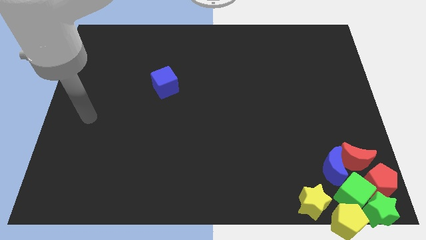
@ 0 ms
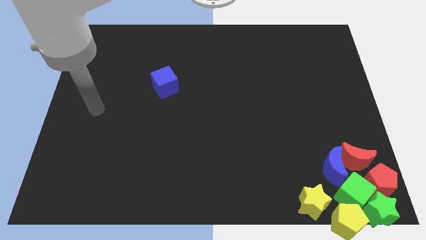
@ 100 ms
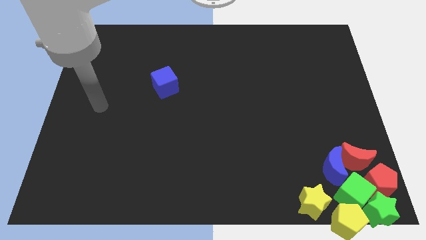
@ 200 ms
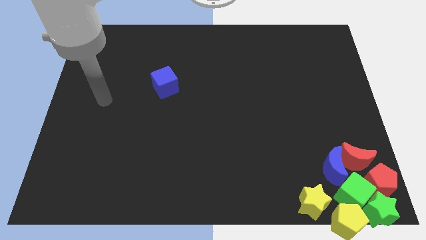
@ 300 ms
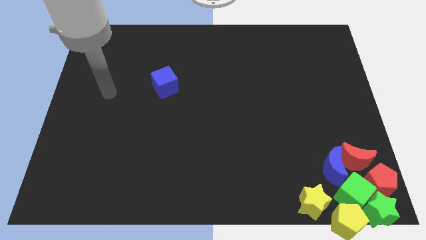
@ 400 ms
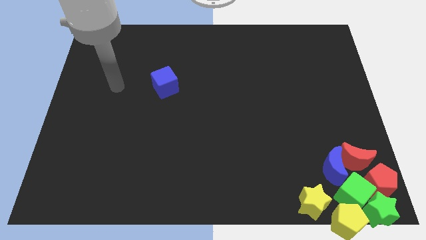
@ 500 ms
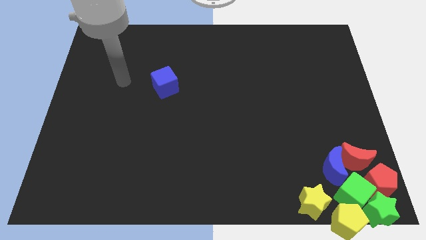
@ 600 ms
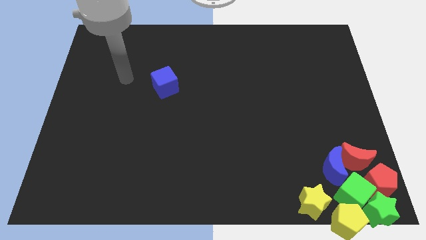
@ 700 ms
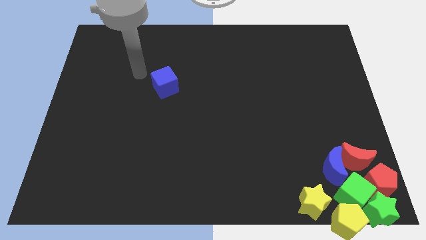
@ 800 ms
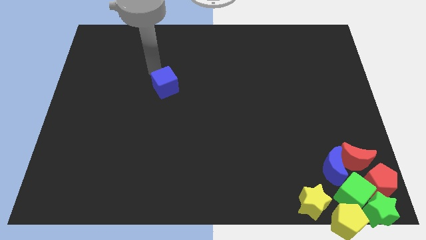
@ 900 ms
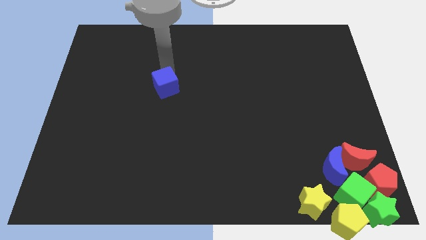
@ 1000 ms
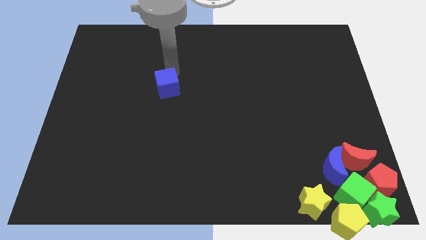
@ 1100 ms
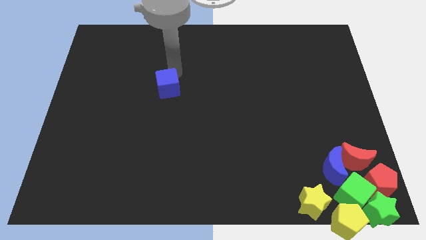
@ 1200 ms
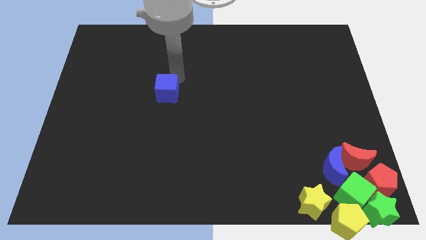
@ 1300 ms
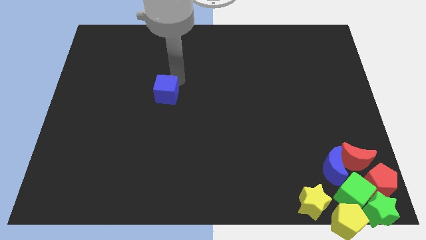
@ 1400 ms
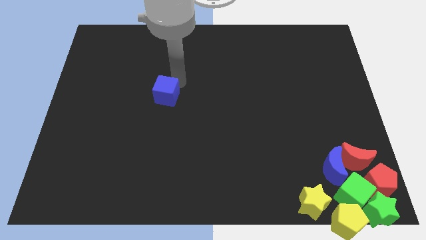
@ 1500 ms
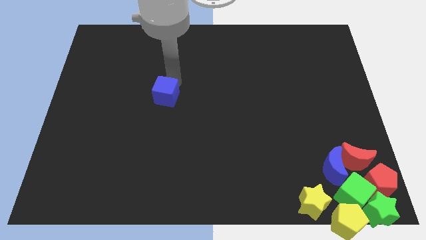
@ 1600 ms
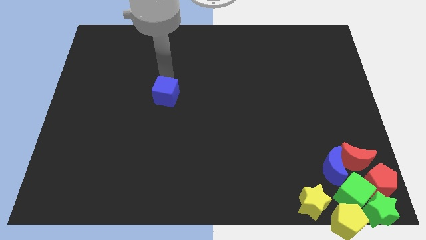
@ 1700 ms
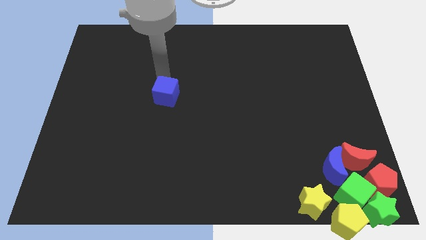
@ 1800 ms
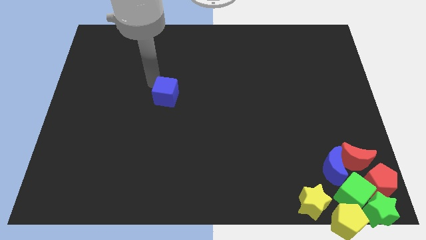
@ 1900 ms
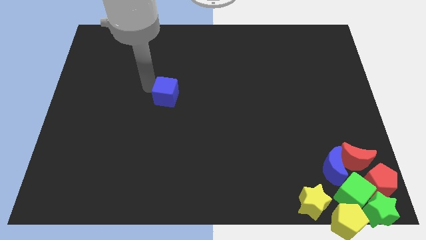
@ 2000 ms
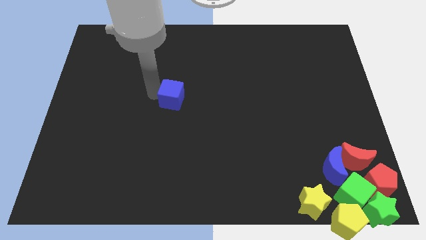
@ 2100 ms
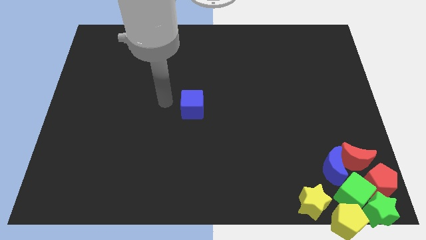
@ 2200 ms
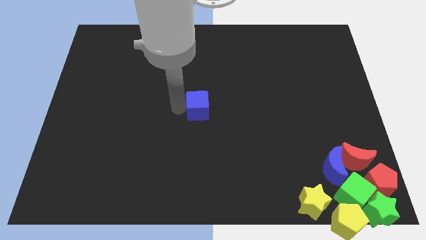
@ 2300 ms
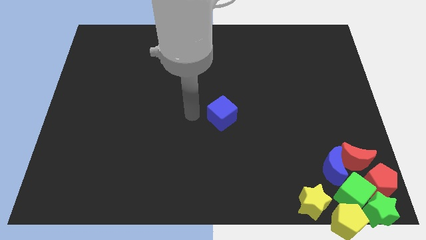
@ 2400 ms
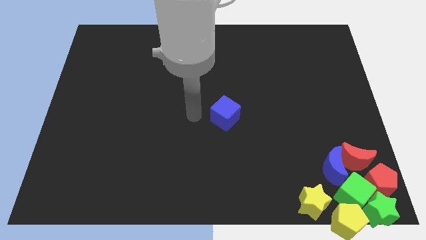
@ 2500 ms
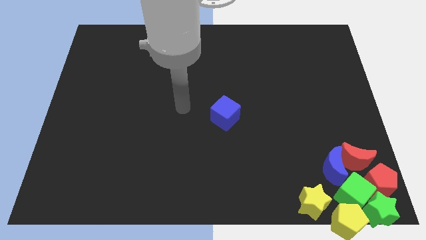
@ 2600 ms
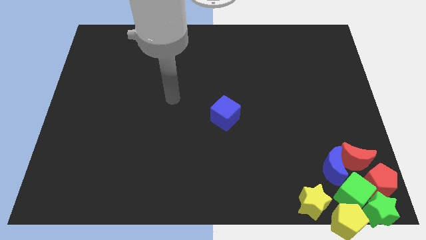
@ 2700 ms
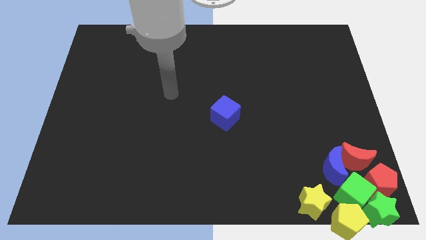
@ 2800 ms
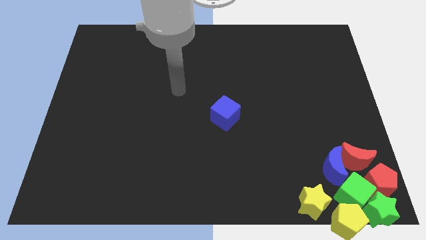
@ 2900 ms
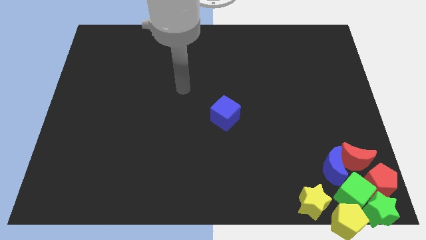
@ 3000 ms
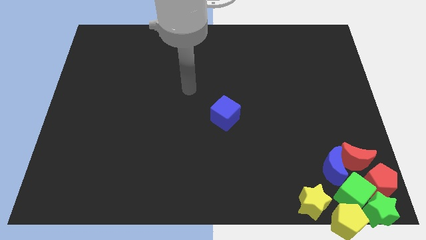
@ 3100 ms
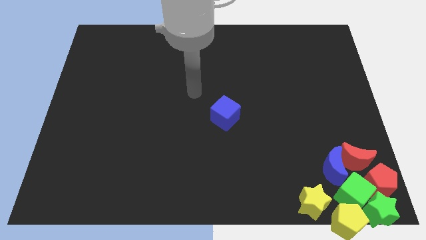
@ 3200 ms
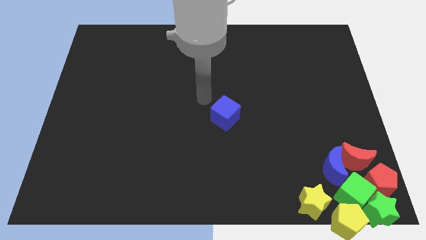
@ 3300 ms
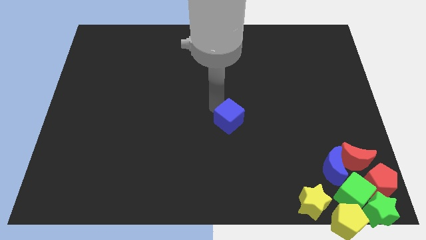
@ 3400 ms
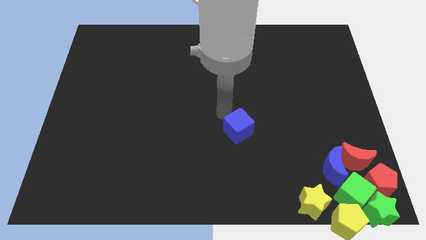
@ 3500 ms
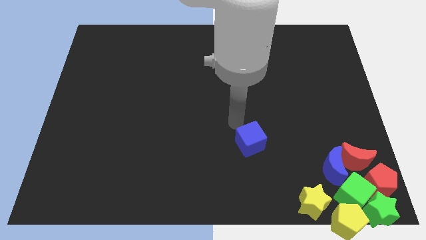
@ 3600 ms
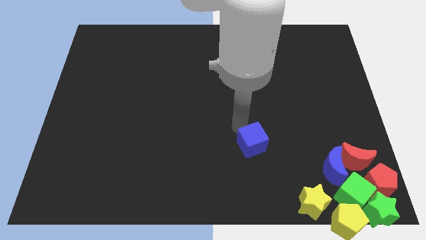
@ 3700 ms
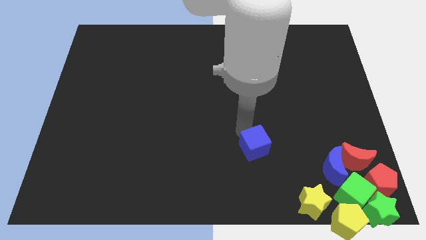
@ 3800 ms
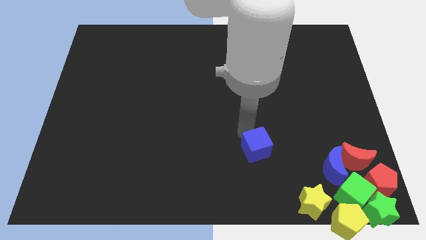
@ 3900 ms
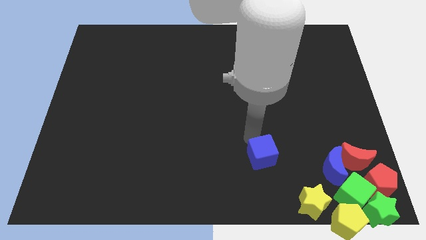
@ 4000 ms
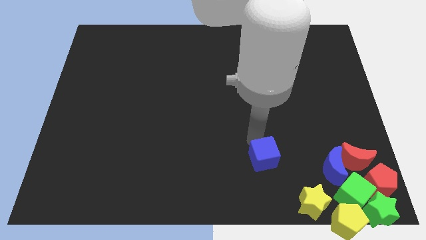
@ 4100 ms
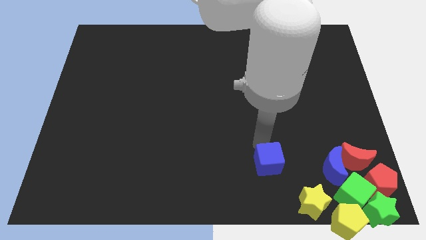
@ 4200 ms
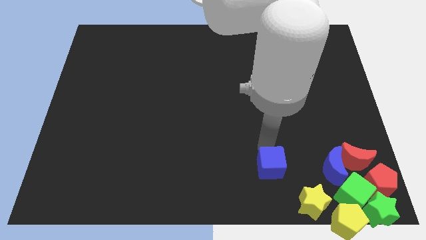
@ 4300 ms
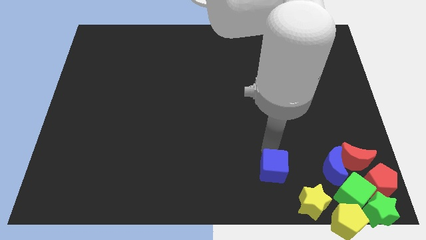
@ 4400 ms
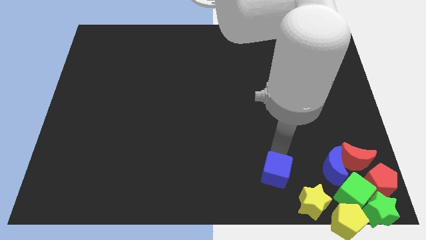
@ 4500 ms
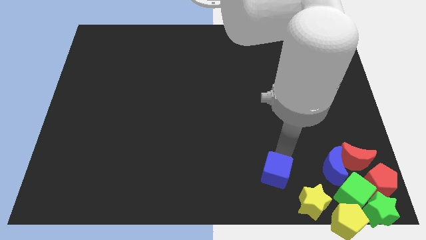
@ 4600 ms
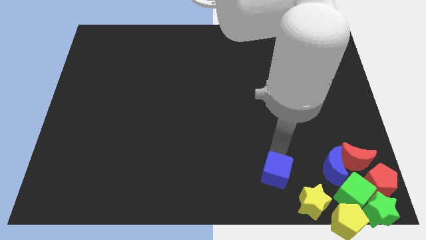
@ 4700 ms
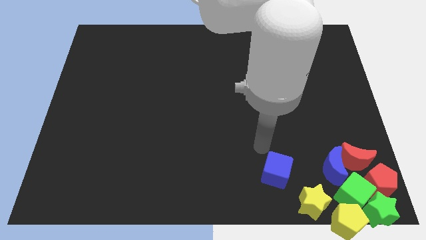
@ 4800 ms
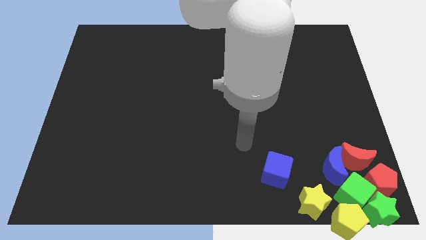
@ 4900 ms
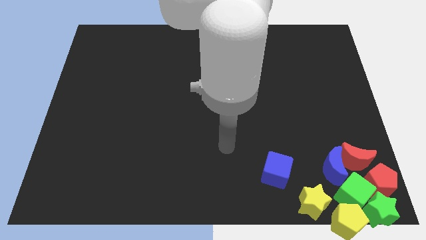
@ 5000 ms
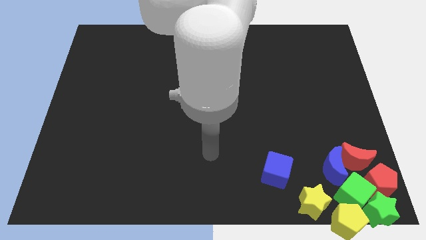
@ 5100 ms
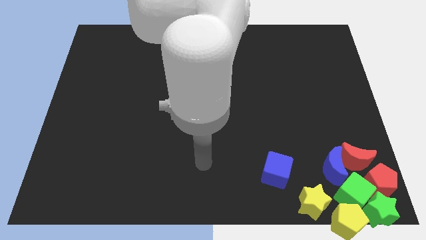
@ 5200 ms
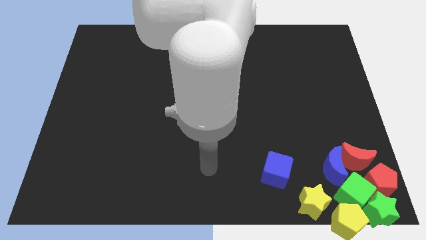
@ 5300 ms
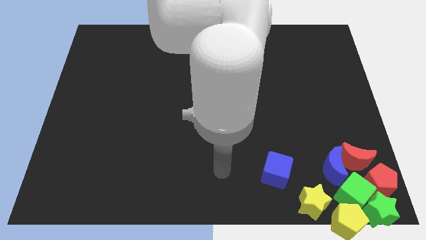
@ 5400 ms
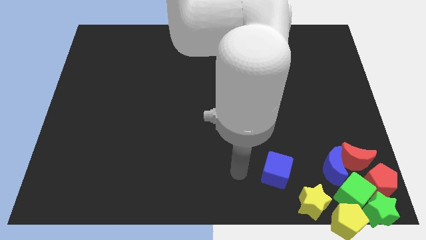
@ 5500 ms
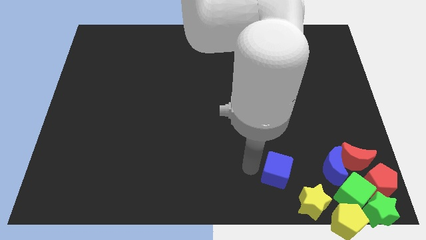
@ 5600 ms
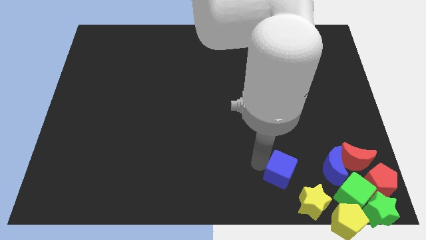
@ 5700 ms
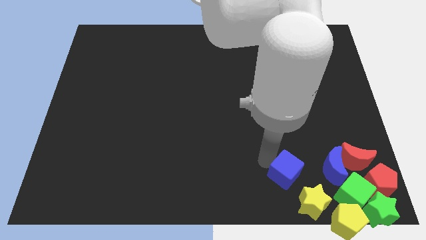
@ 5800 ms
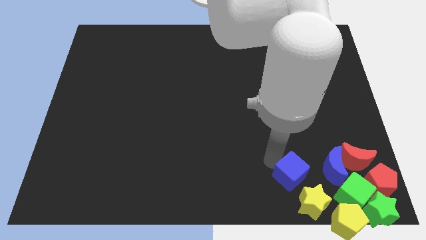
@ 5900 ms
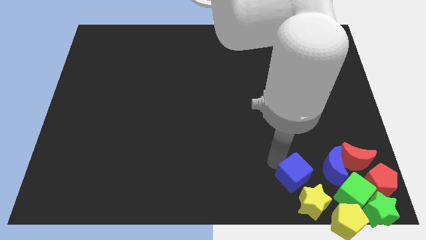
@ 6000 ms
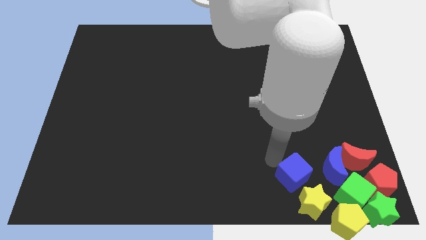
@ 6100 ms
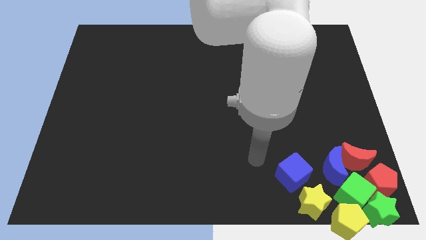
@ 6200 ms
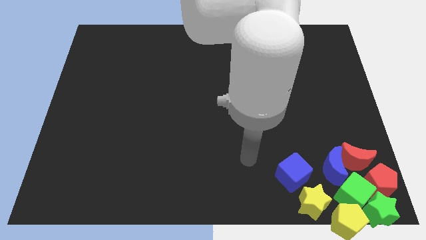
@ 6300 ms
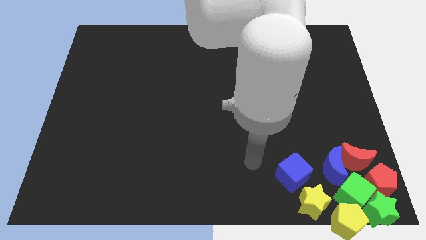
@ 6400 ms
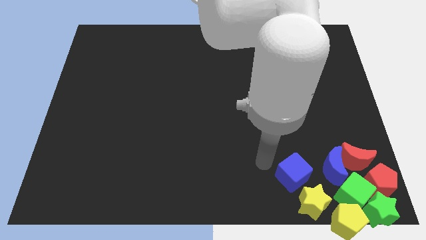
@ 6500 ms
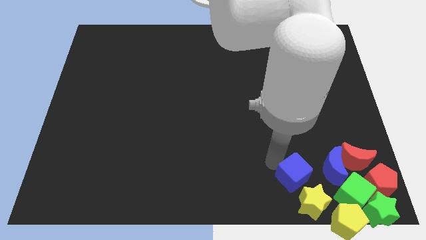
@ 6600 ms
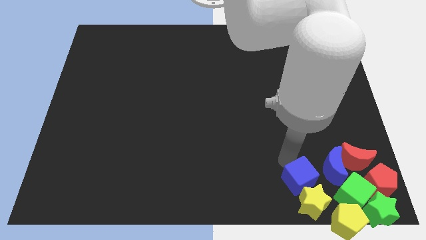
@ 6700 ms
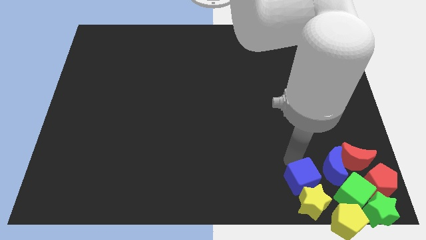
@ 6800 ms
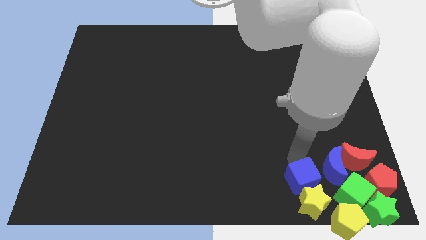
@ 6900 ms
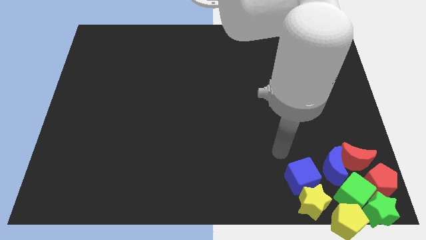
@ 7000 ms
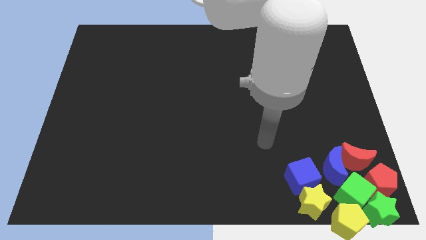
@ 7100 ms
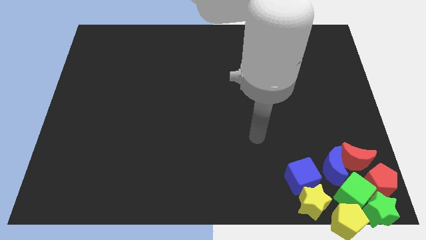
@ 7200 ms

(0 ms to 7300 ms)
move the blue cube towards the group of blocks

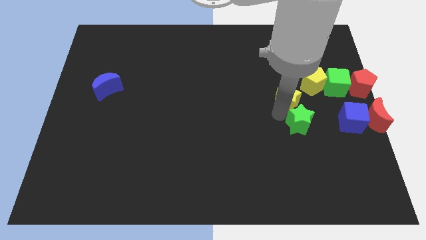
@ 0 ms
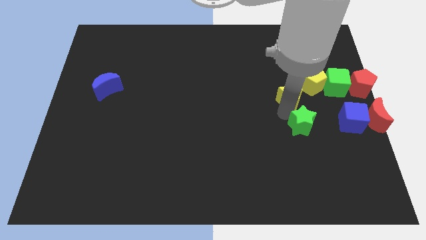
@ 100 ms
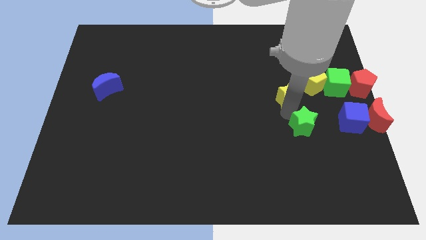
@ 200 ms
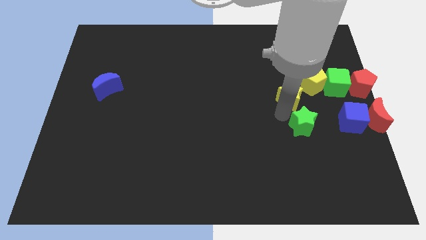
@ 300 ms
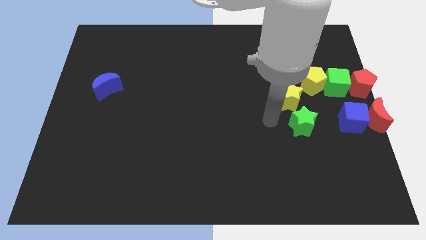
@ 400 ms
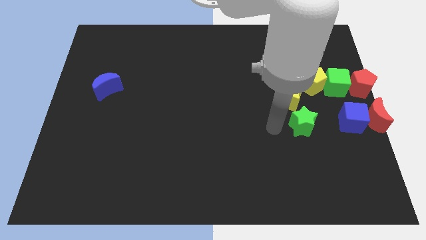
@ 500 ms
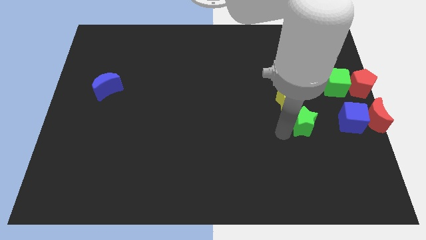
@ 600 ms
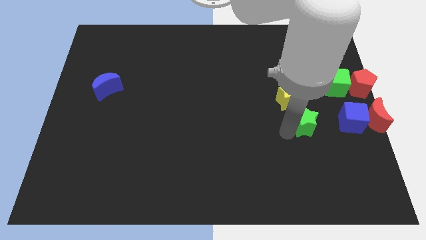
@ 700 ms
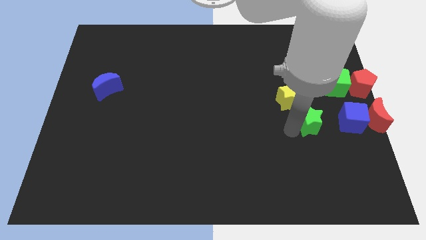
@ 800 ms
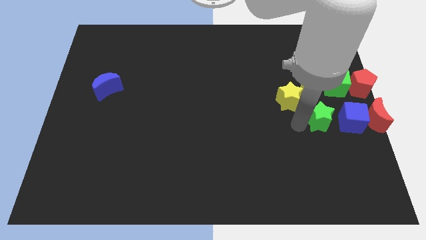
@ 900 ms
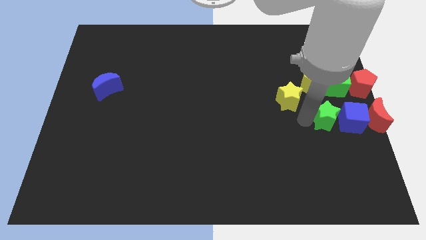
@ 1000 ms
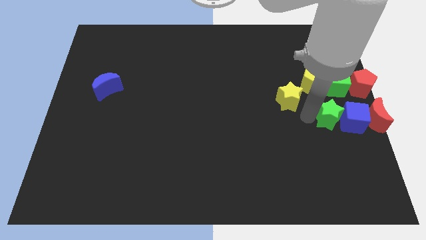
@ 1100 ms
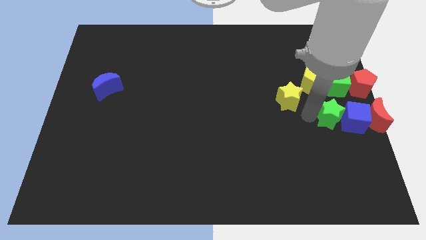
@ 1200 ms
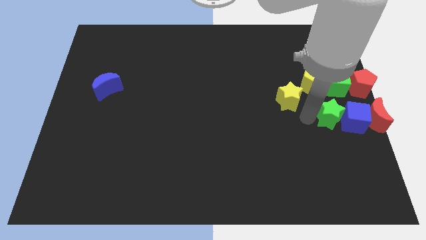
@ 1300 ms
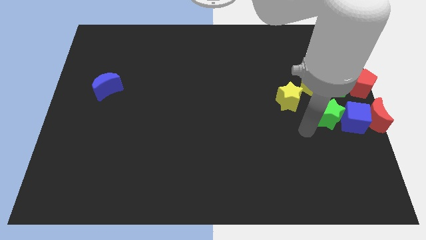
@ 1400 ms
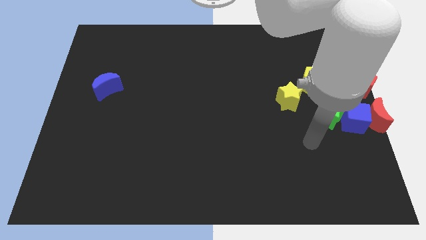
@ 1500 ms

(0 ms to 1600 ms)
move the green star beside the blue cube
